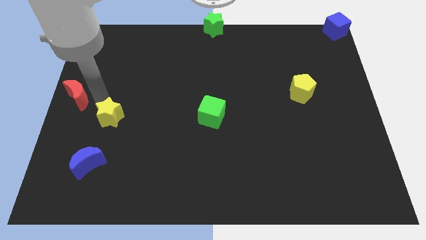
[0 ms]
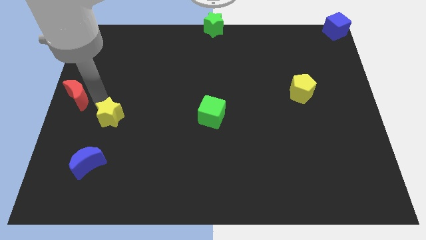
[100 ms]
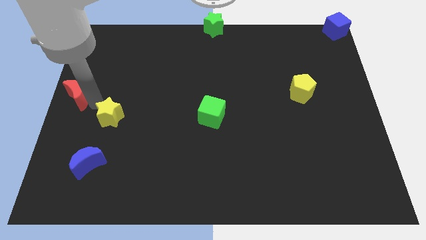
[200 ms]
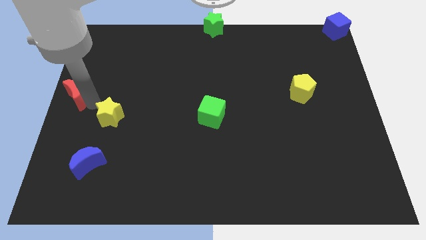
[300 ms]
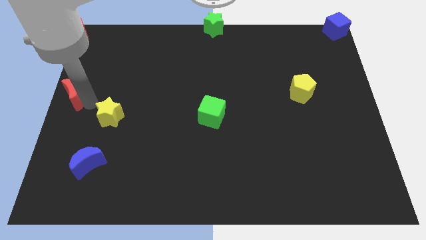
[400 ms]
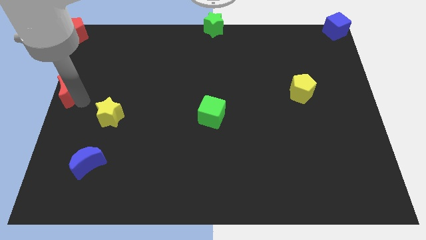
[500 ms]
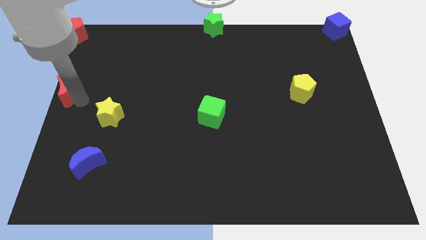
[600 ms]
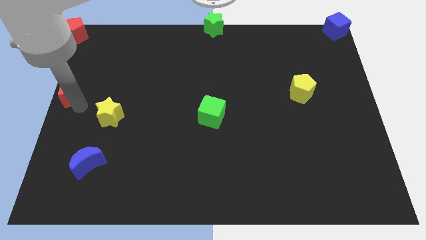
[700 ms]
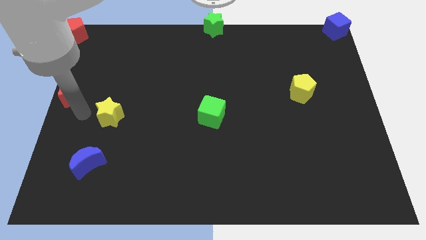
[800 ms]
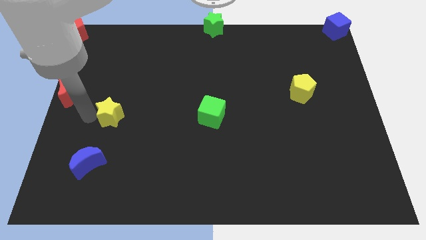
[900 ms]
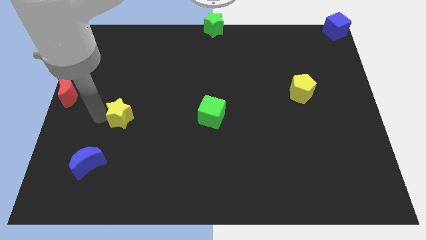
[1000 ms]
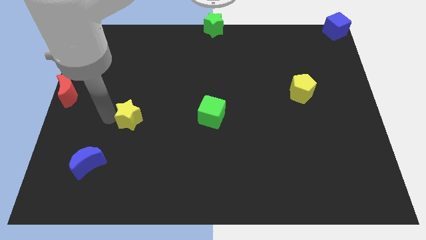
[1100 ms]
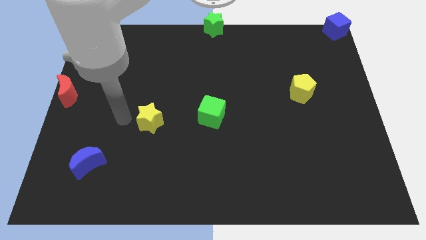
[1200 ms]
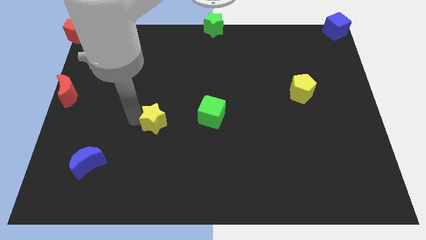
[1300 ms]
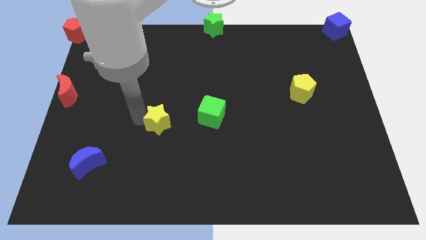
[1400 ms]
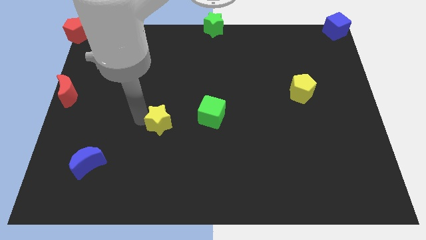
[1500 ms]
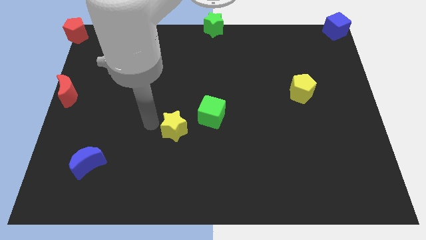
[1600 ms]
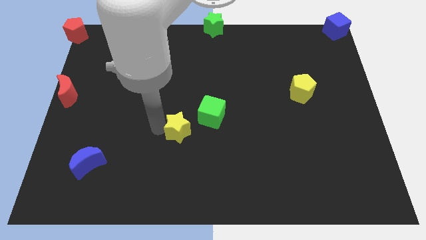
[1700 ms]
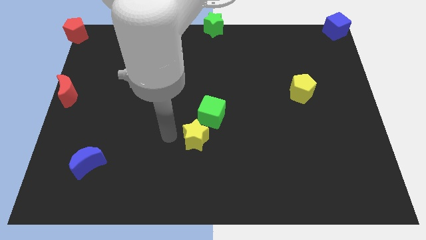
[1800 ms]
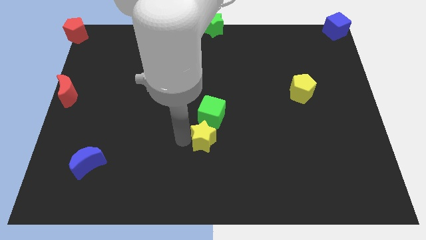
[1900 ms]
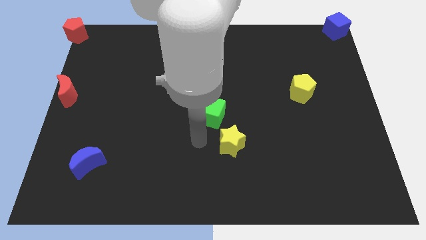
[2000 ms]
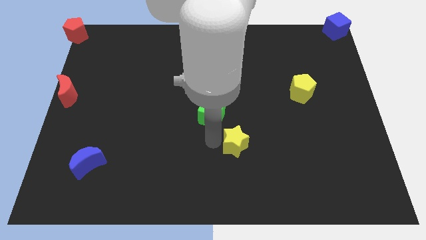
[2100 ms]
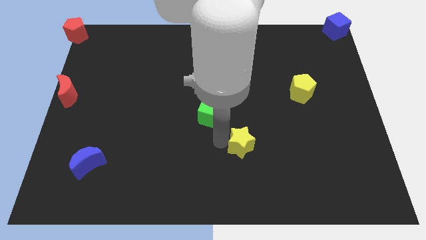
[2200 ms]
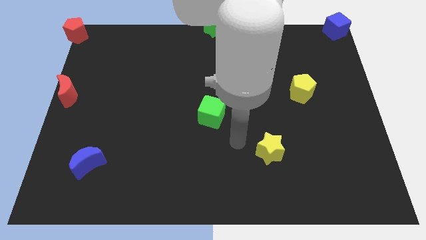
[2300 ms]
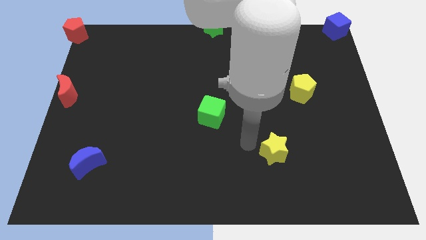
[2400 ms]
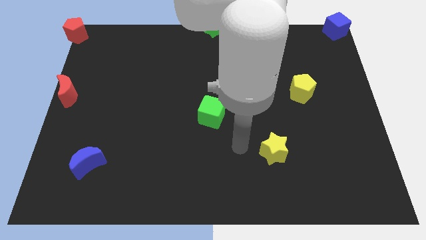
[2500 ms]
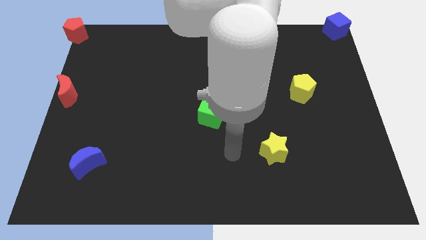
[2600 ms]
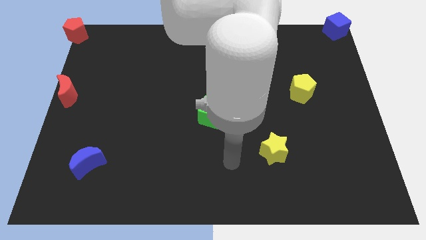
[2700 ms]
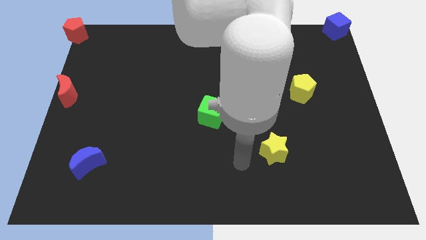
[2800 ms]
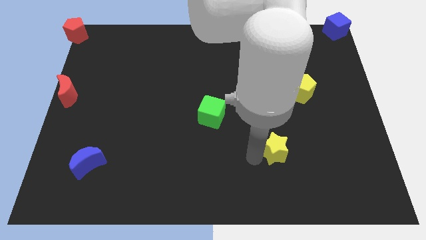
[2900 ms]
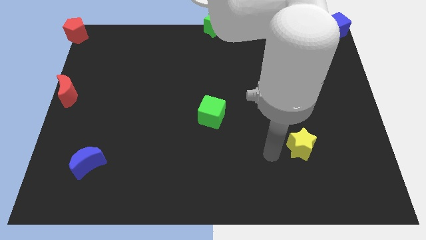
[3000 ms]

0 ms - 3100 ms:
place the yellow star at the bottom side of the yellow pentagon

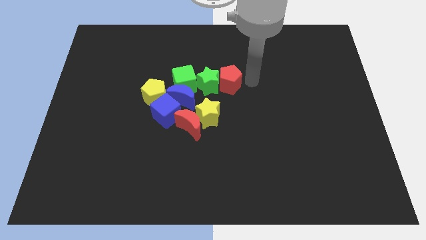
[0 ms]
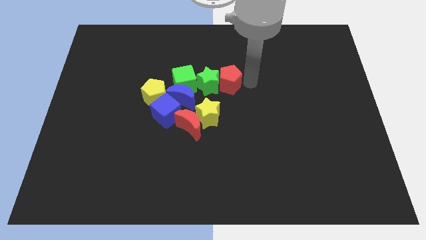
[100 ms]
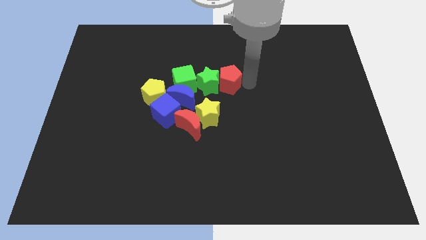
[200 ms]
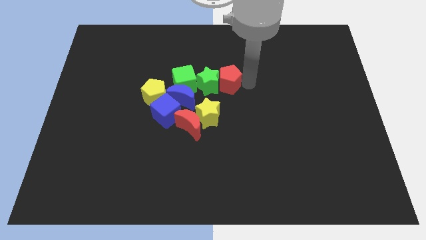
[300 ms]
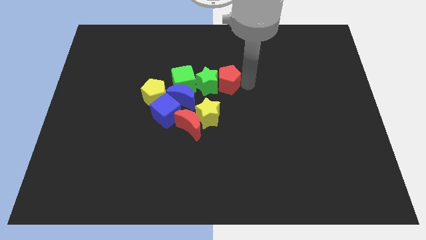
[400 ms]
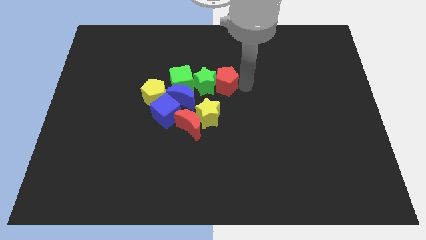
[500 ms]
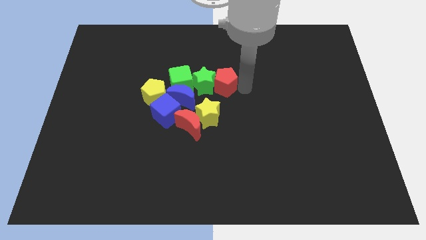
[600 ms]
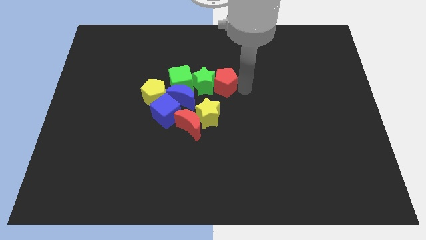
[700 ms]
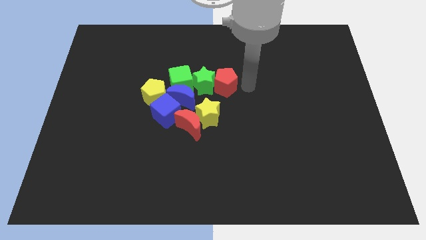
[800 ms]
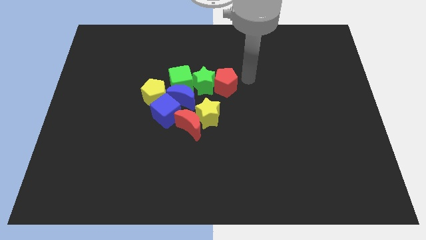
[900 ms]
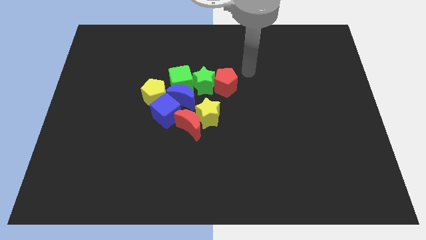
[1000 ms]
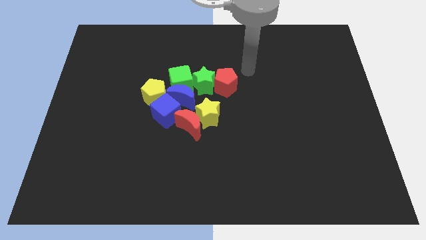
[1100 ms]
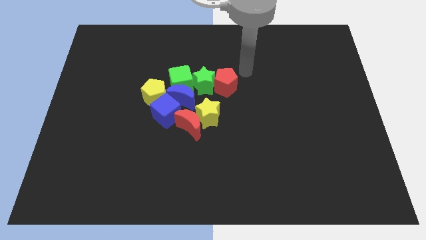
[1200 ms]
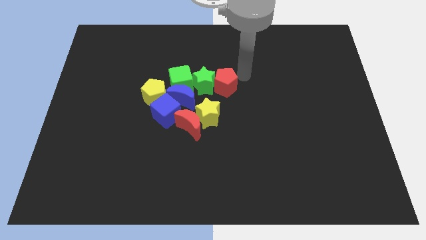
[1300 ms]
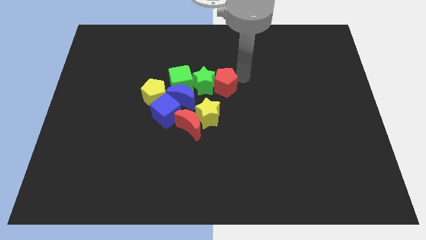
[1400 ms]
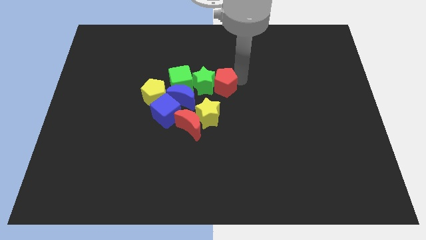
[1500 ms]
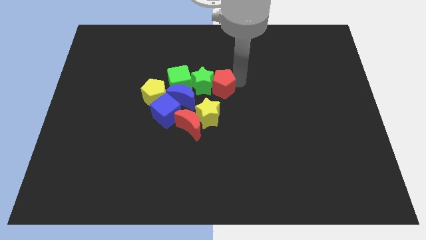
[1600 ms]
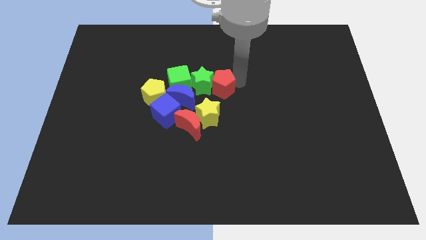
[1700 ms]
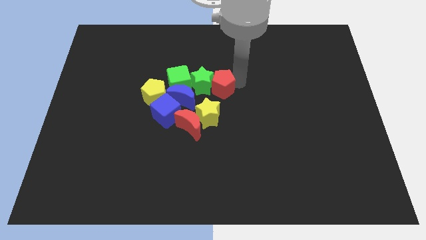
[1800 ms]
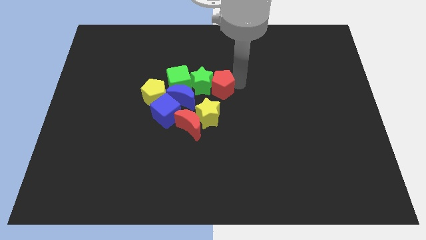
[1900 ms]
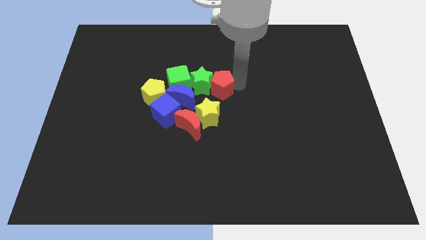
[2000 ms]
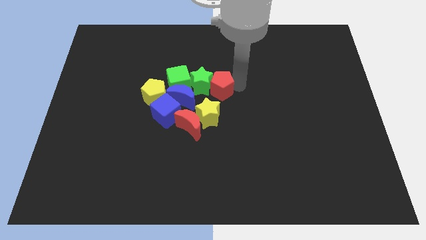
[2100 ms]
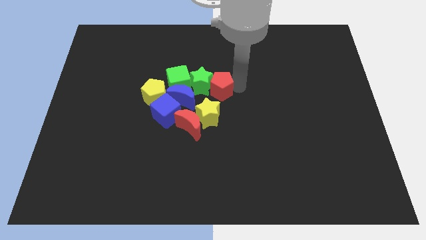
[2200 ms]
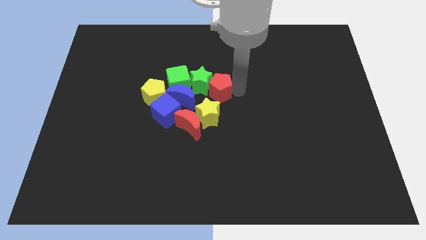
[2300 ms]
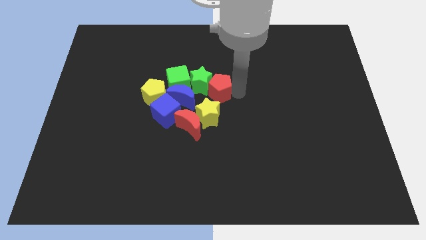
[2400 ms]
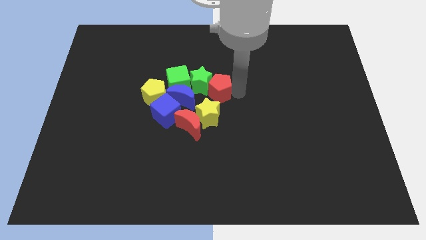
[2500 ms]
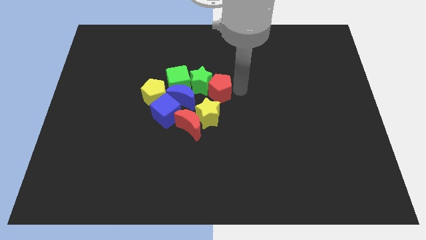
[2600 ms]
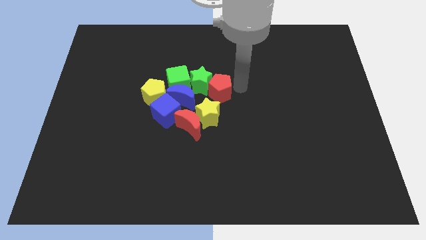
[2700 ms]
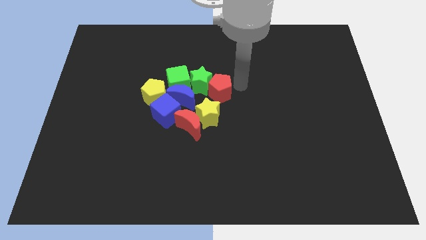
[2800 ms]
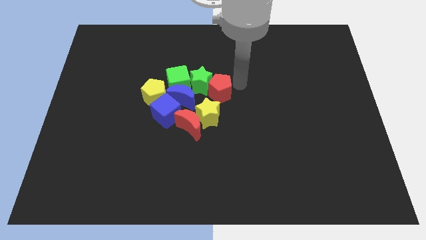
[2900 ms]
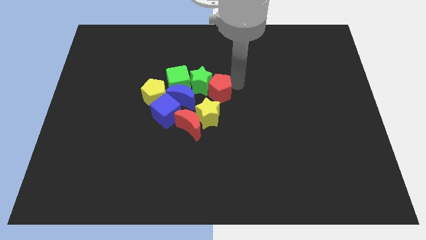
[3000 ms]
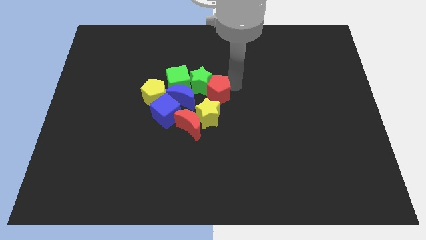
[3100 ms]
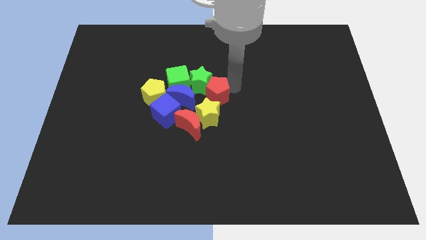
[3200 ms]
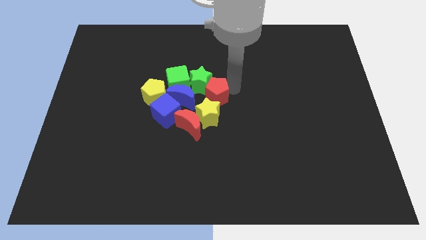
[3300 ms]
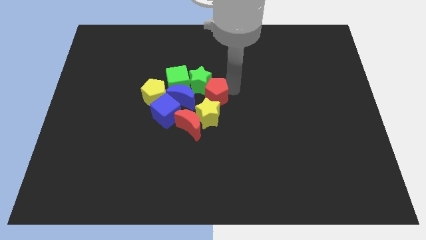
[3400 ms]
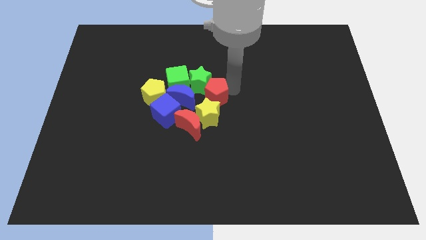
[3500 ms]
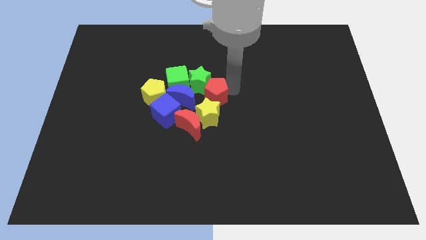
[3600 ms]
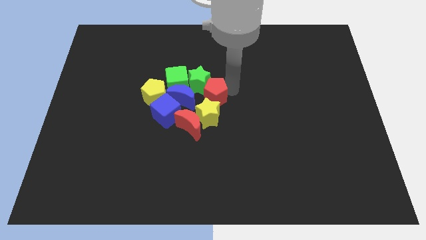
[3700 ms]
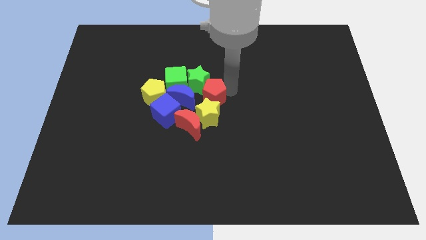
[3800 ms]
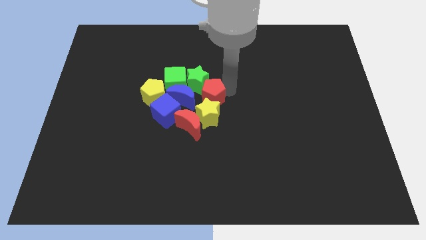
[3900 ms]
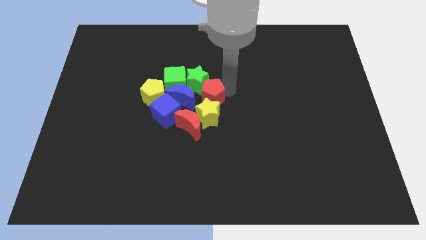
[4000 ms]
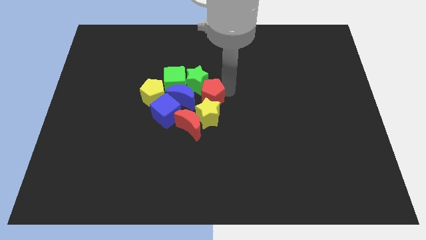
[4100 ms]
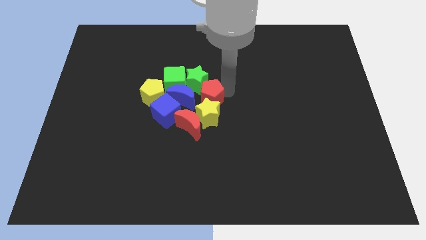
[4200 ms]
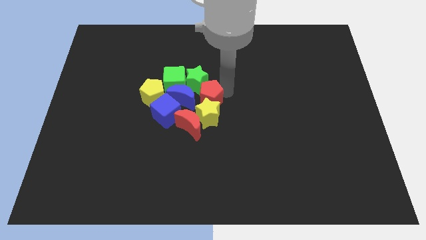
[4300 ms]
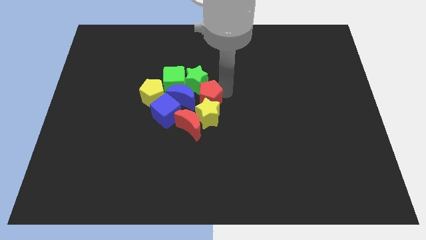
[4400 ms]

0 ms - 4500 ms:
place the red pentagon on the top of the yellow star

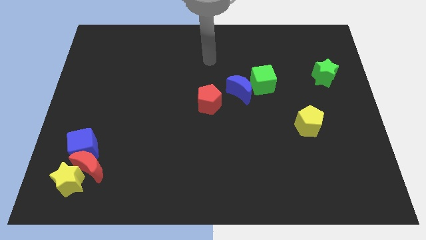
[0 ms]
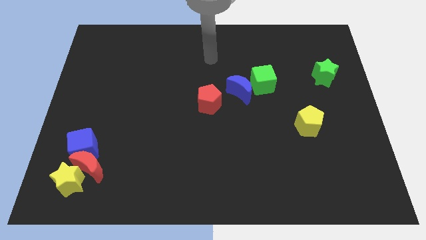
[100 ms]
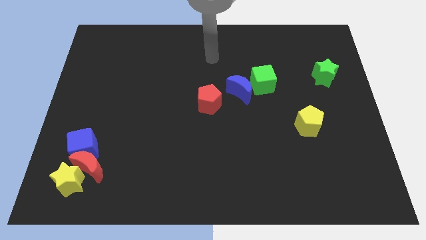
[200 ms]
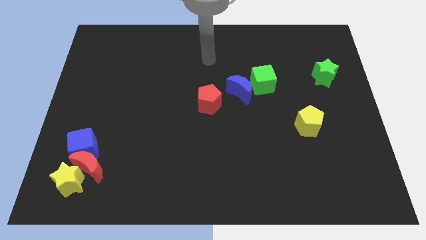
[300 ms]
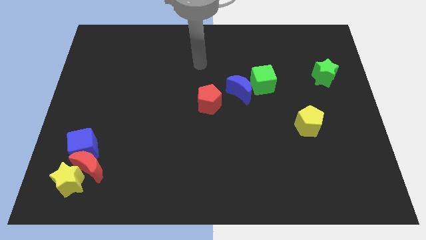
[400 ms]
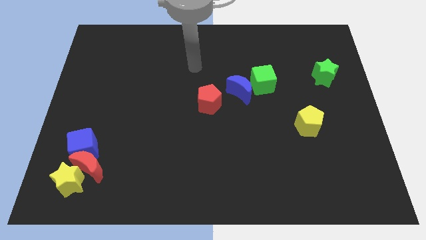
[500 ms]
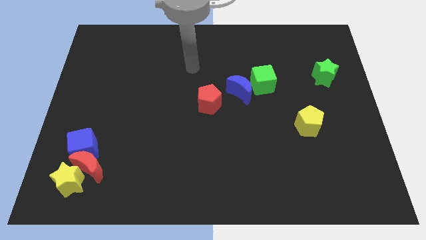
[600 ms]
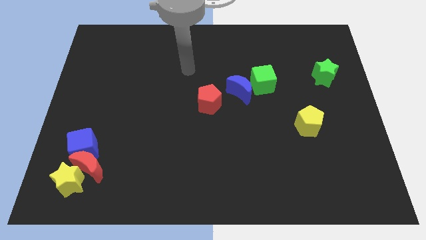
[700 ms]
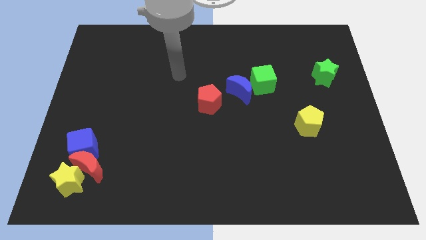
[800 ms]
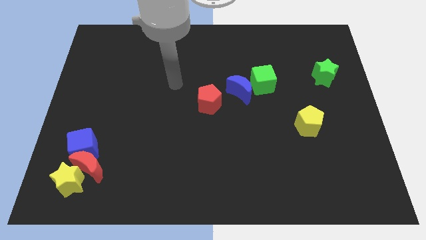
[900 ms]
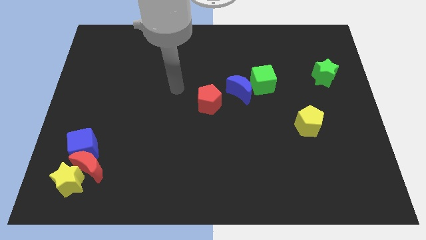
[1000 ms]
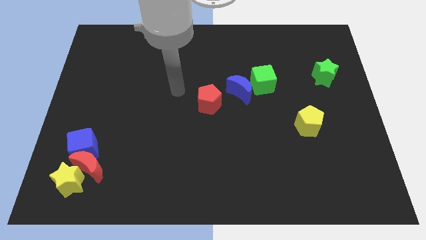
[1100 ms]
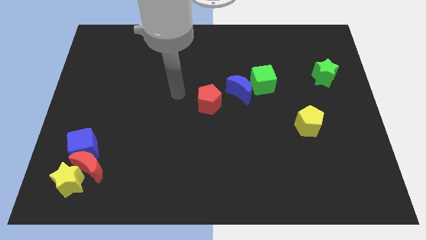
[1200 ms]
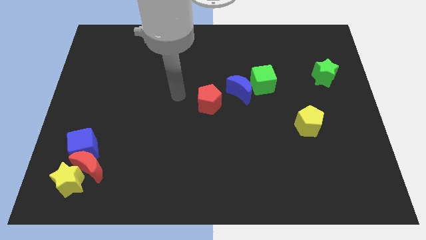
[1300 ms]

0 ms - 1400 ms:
point your arm at the left of the red pentagon
